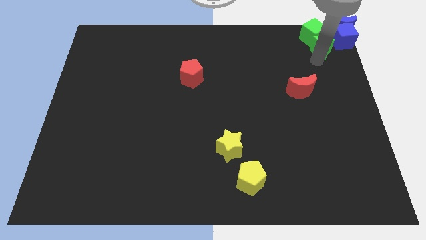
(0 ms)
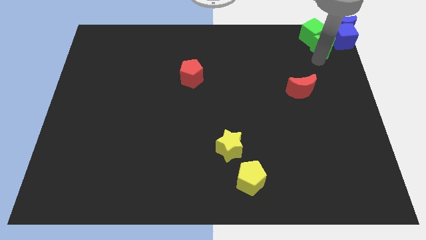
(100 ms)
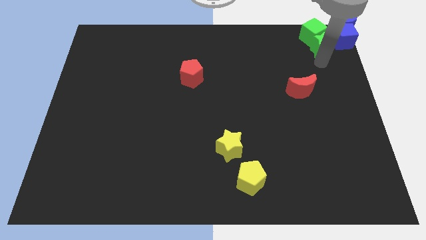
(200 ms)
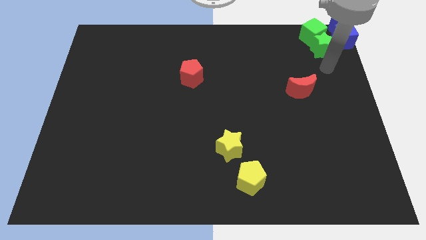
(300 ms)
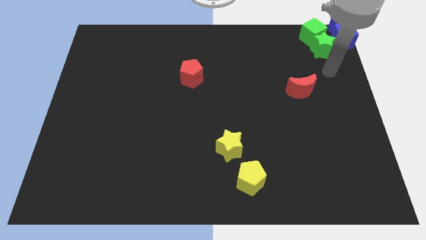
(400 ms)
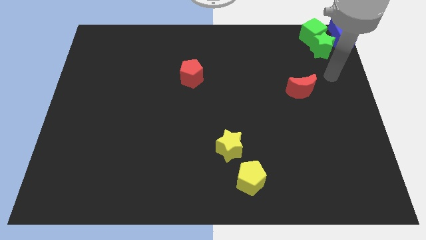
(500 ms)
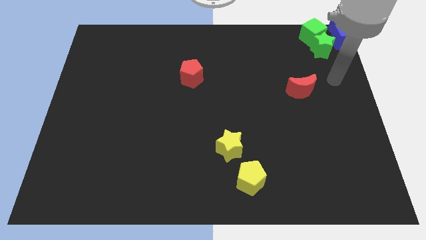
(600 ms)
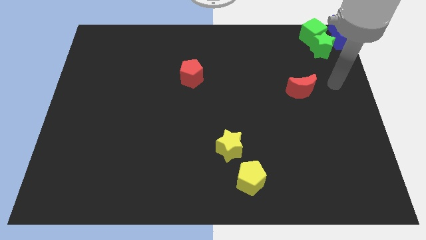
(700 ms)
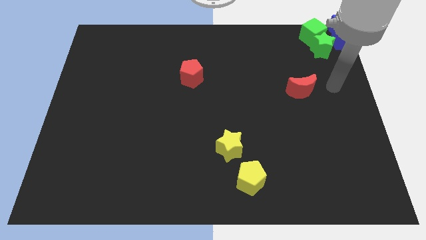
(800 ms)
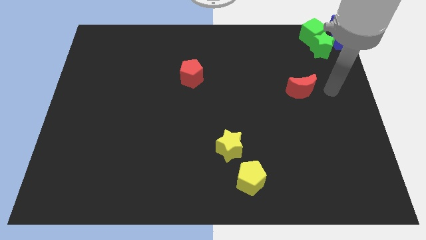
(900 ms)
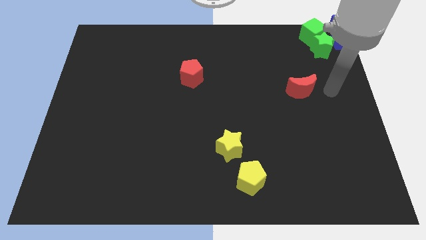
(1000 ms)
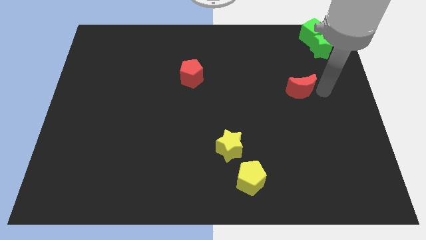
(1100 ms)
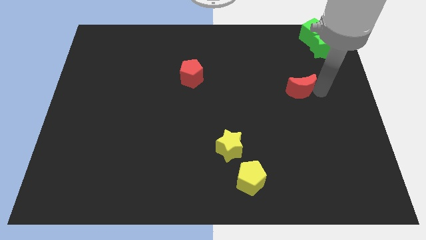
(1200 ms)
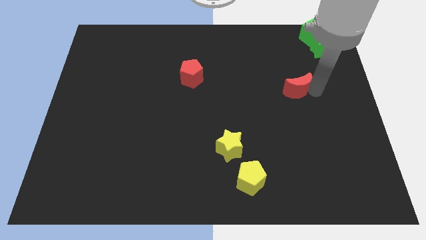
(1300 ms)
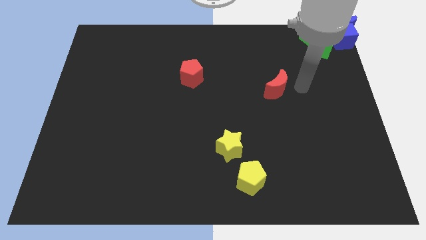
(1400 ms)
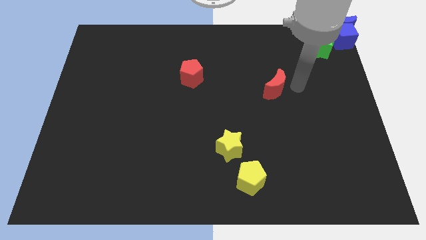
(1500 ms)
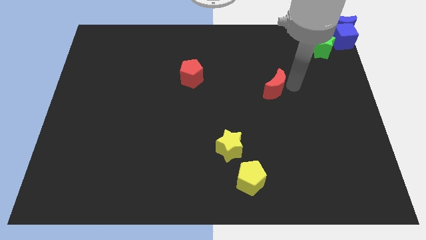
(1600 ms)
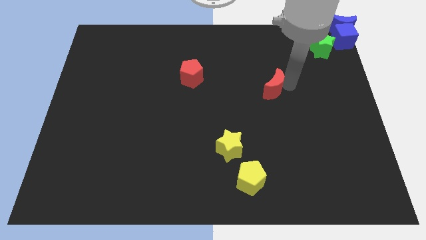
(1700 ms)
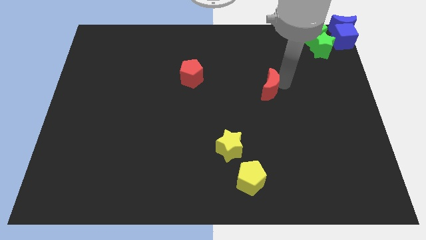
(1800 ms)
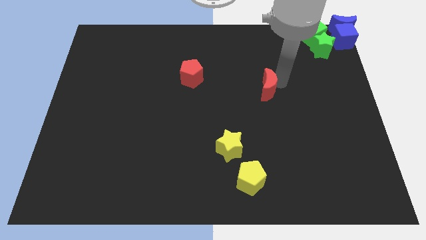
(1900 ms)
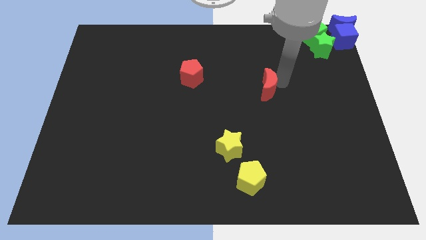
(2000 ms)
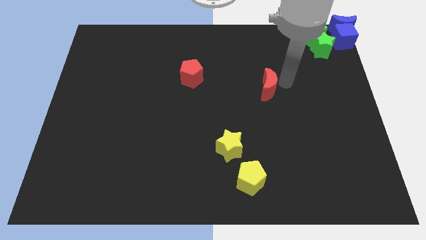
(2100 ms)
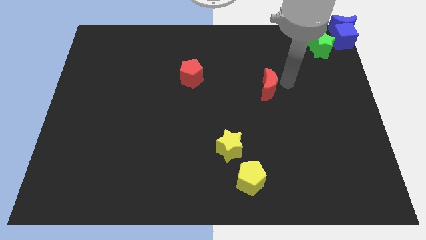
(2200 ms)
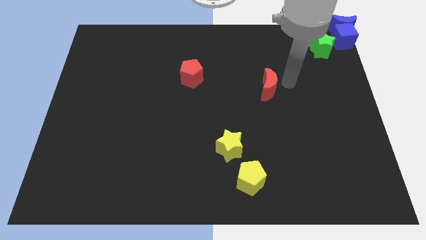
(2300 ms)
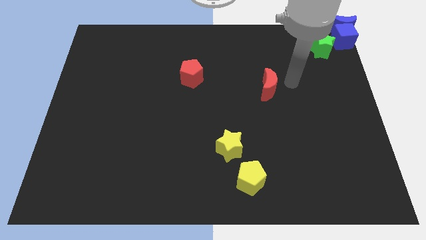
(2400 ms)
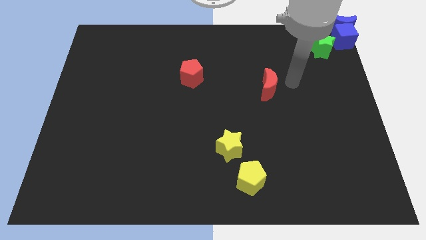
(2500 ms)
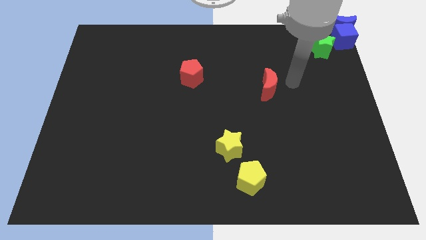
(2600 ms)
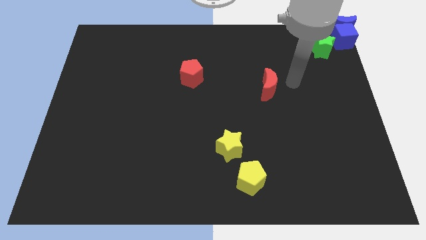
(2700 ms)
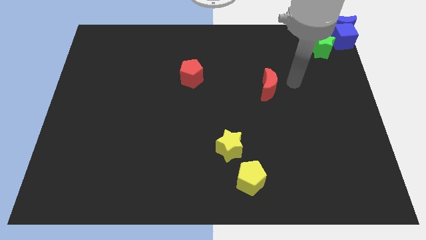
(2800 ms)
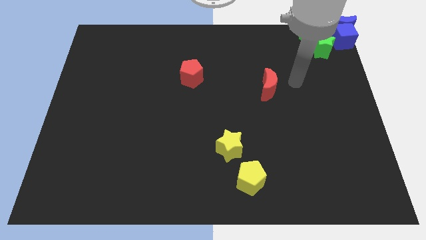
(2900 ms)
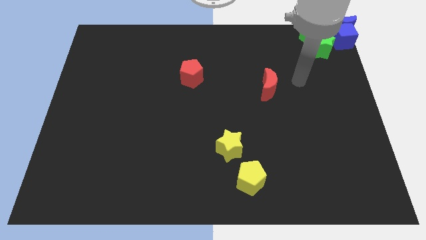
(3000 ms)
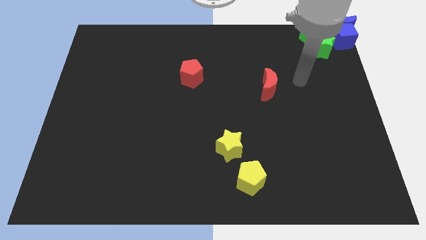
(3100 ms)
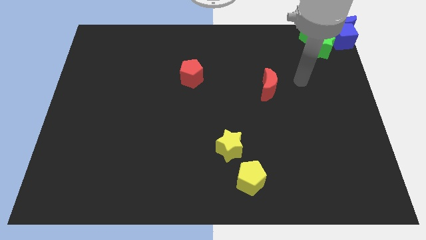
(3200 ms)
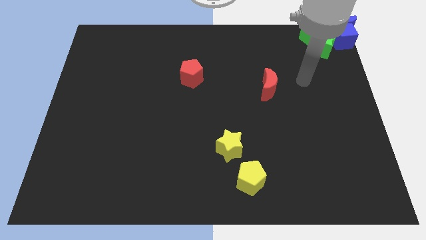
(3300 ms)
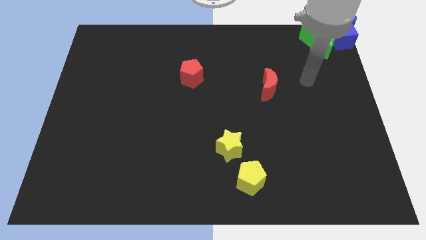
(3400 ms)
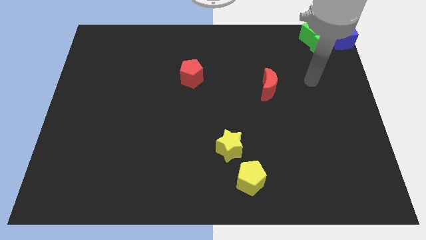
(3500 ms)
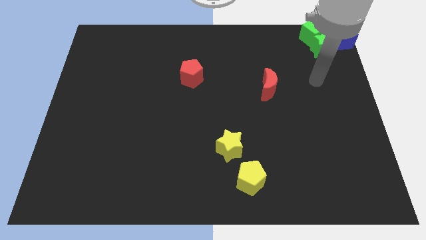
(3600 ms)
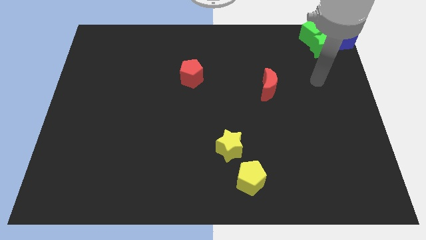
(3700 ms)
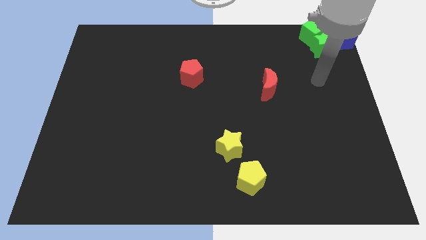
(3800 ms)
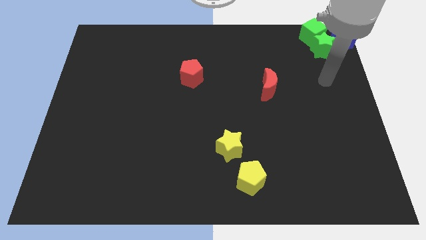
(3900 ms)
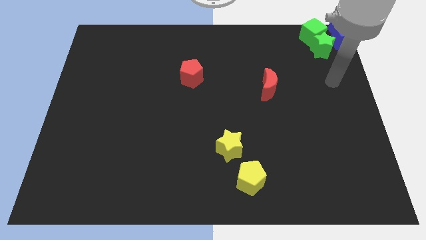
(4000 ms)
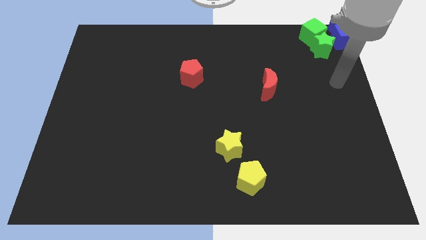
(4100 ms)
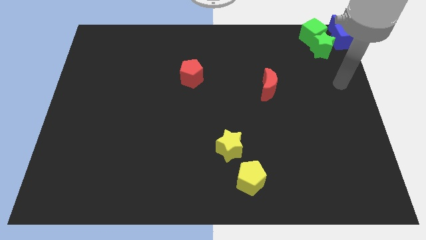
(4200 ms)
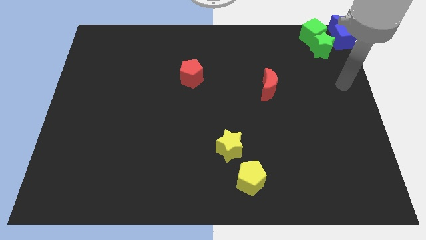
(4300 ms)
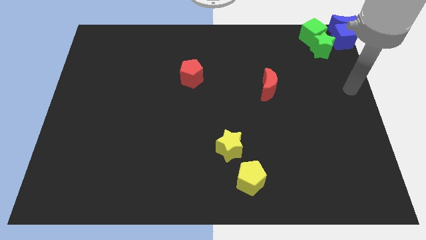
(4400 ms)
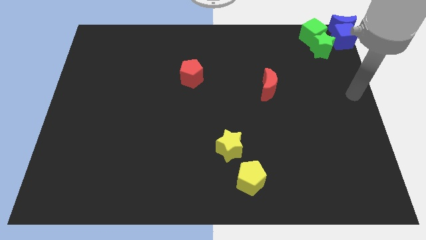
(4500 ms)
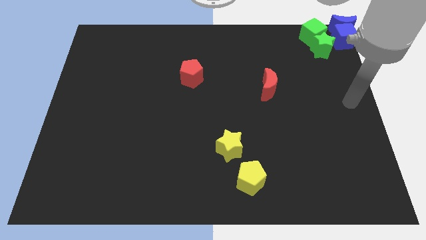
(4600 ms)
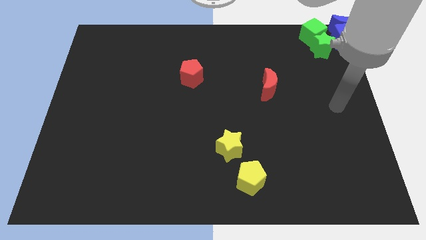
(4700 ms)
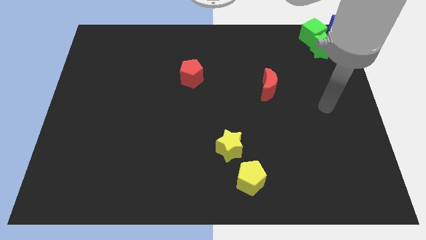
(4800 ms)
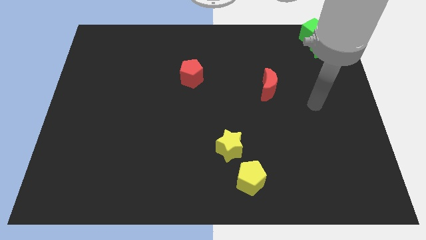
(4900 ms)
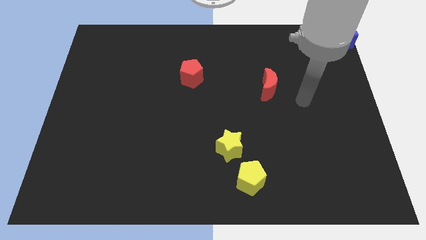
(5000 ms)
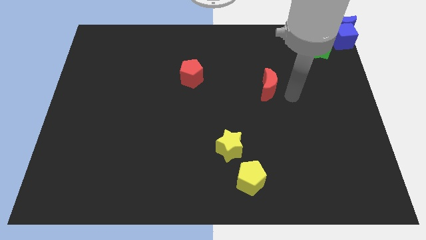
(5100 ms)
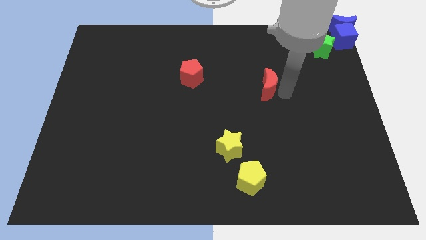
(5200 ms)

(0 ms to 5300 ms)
push the red crescent slightly to the left

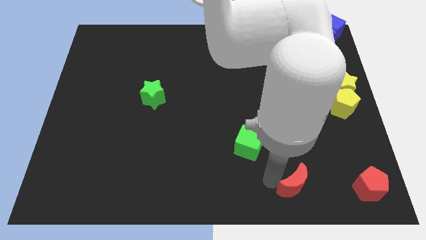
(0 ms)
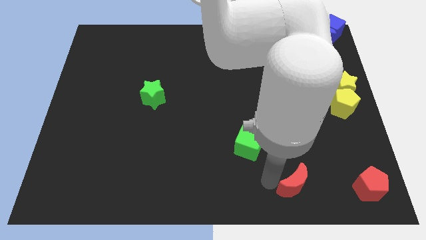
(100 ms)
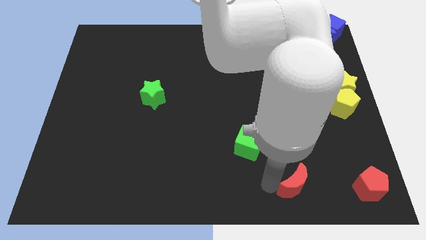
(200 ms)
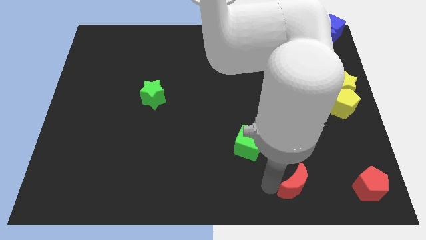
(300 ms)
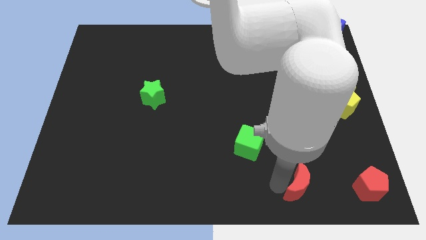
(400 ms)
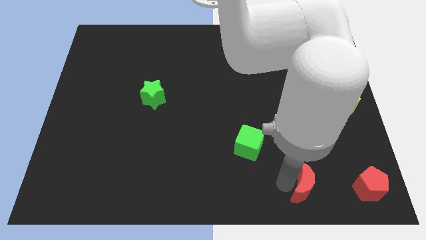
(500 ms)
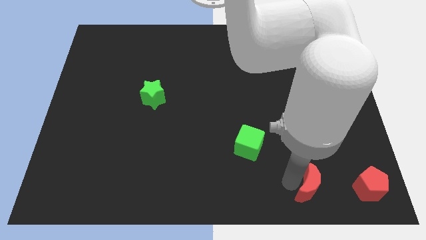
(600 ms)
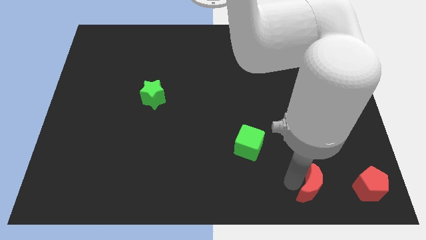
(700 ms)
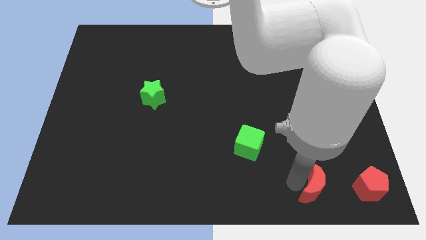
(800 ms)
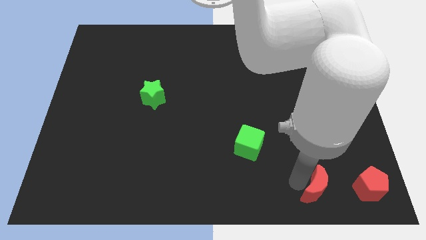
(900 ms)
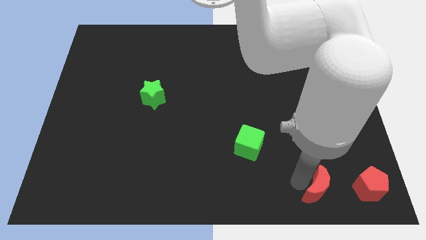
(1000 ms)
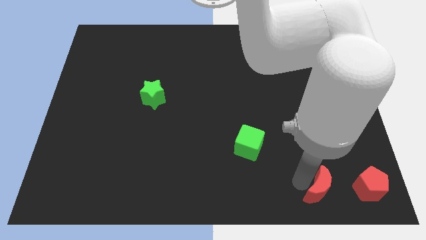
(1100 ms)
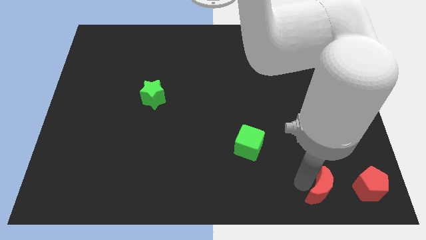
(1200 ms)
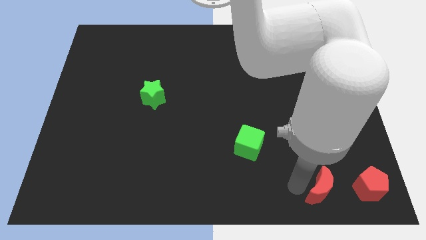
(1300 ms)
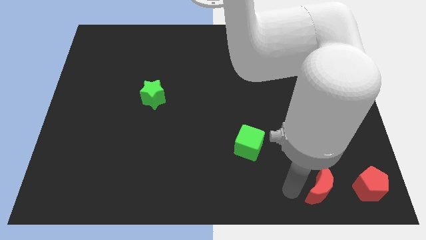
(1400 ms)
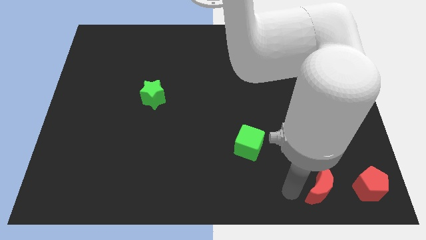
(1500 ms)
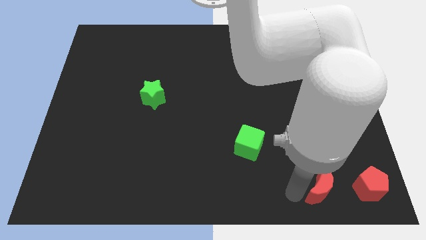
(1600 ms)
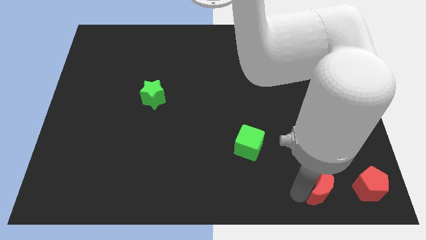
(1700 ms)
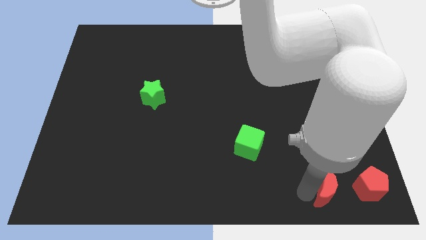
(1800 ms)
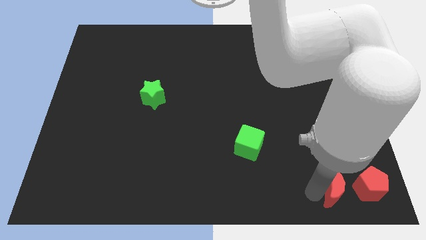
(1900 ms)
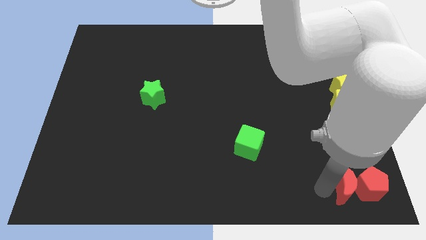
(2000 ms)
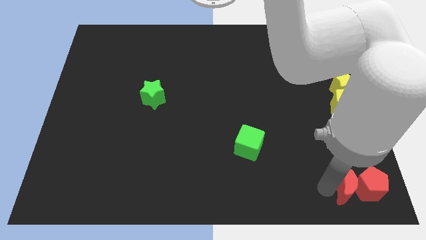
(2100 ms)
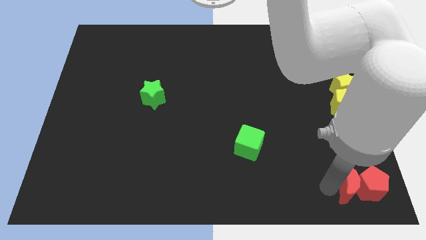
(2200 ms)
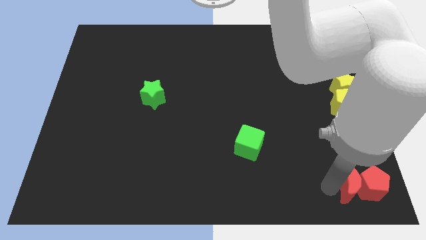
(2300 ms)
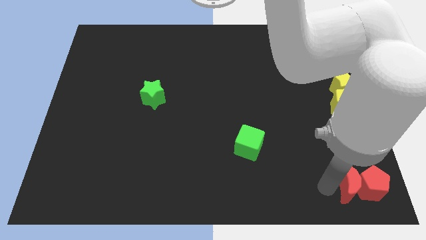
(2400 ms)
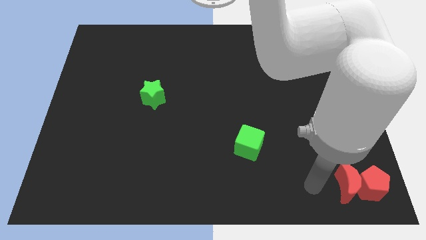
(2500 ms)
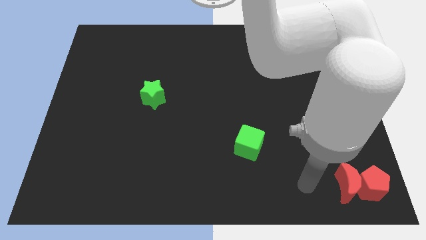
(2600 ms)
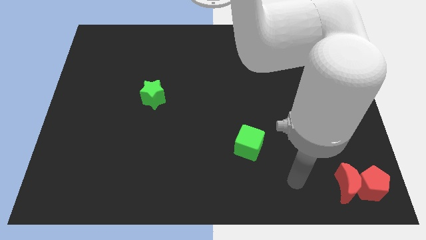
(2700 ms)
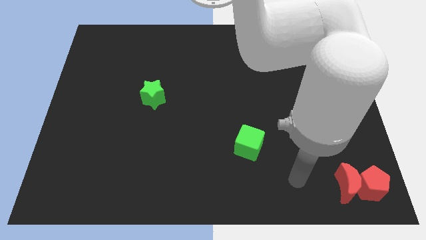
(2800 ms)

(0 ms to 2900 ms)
push the red crescent into red pentagon

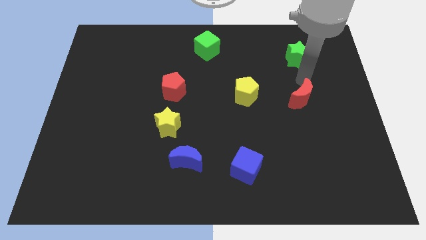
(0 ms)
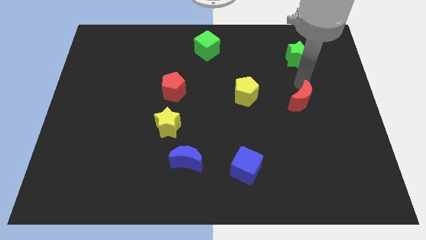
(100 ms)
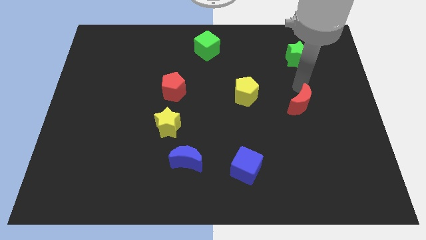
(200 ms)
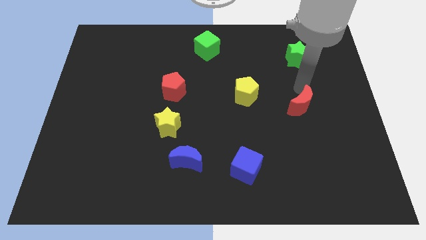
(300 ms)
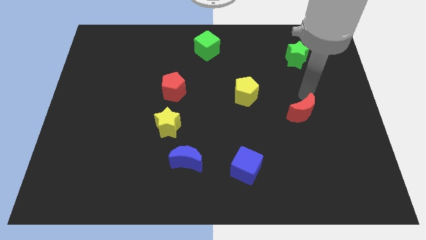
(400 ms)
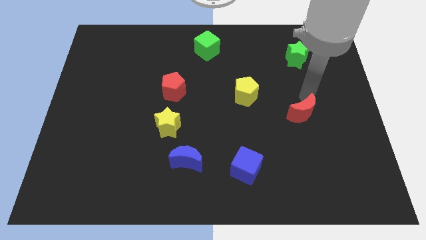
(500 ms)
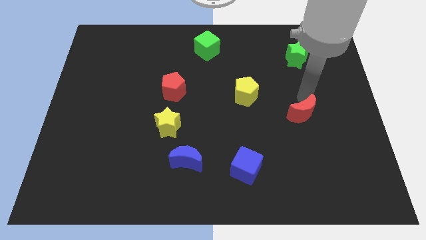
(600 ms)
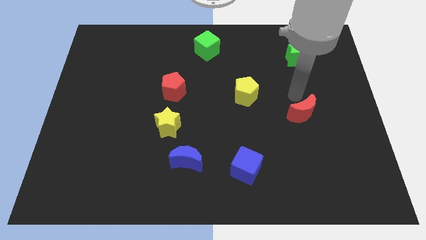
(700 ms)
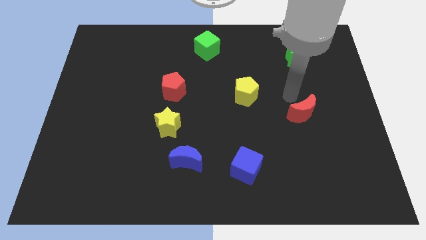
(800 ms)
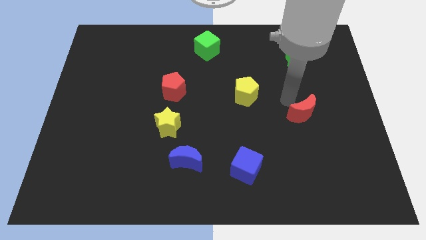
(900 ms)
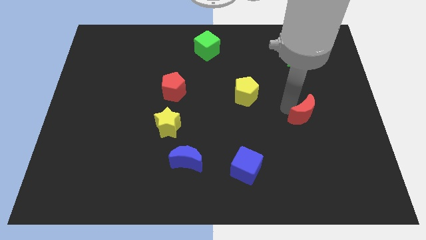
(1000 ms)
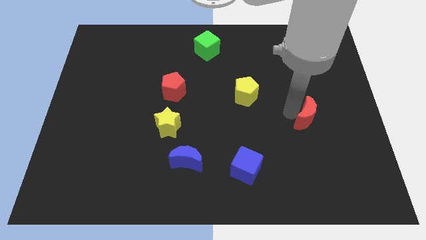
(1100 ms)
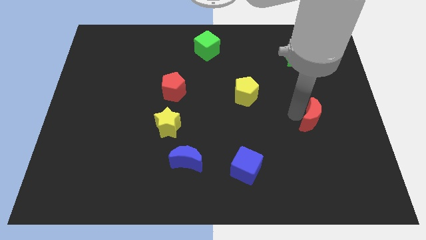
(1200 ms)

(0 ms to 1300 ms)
push red moon slightly to the bottom
